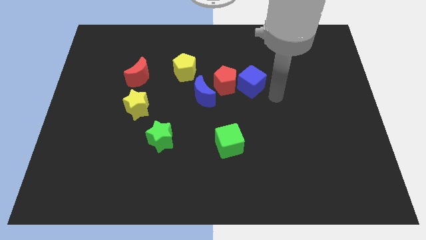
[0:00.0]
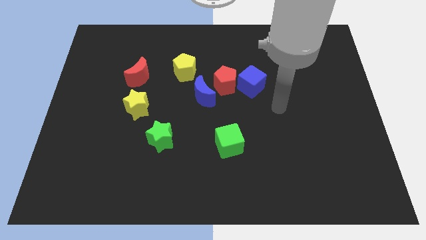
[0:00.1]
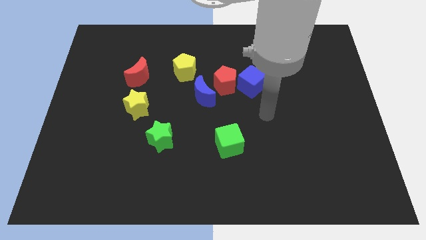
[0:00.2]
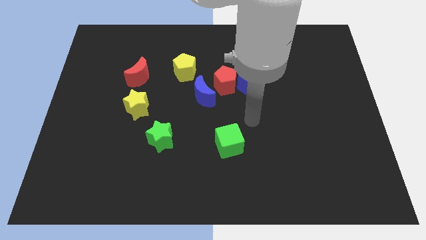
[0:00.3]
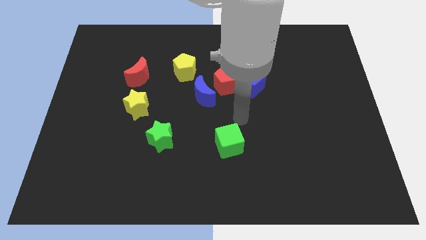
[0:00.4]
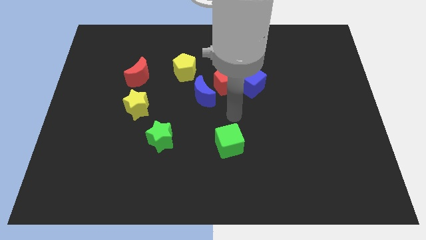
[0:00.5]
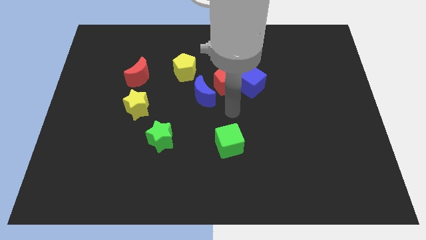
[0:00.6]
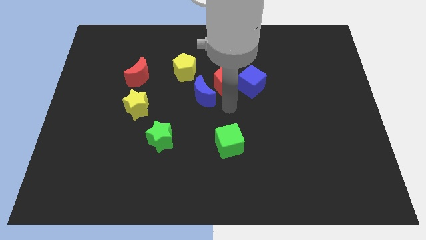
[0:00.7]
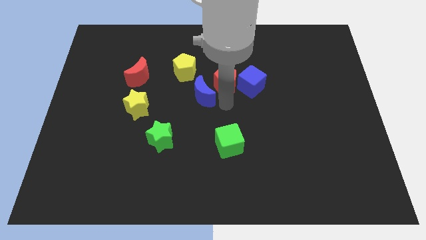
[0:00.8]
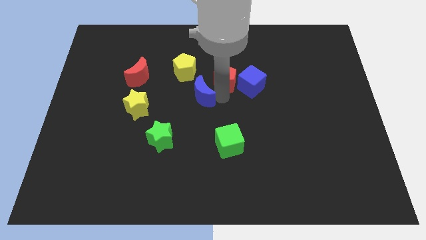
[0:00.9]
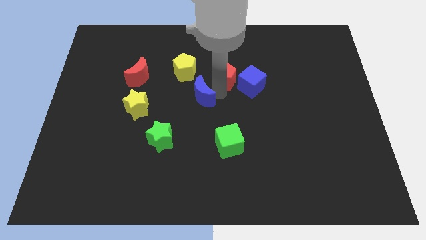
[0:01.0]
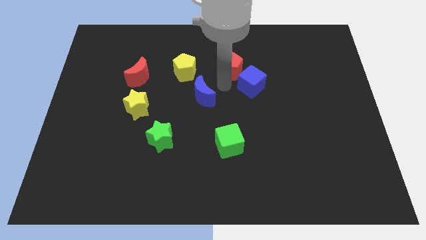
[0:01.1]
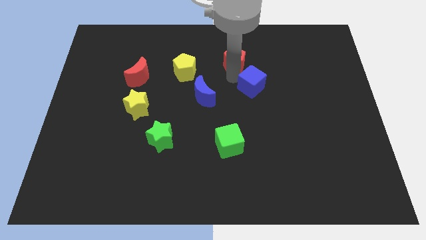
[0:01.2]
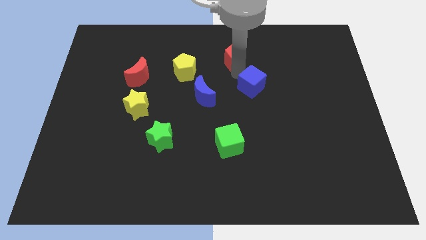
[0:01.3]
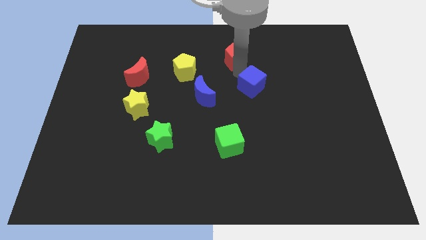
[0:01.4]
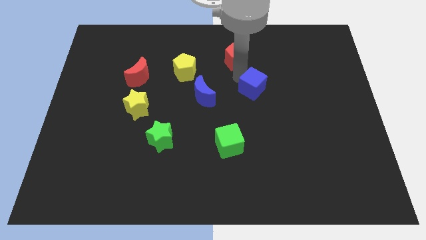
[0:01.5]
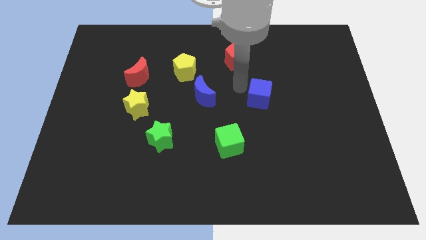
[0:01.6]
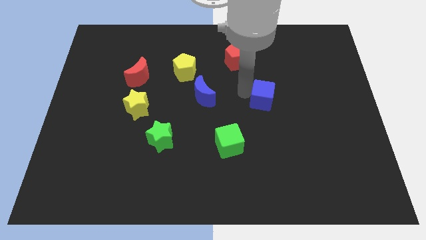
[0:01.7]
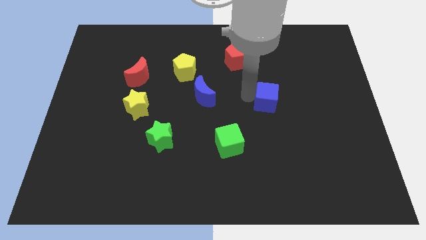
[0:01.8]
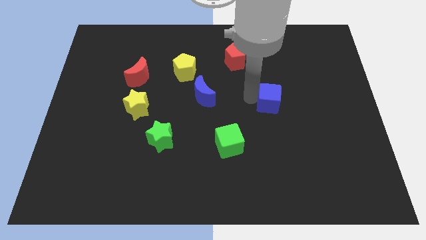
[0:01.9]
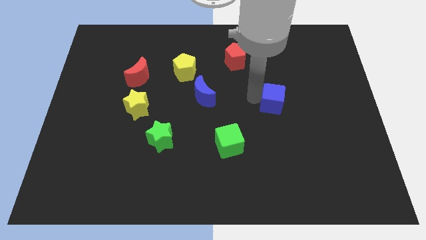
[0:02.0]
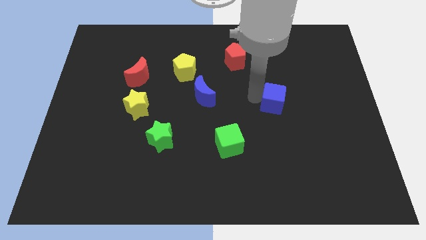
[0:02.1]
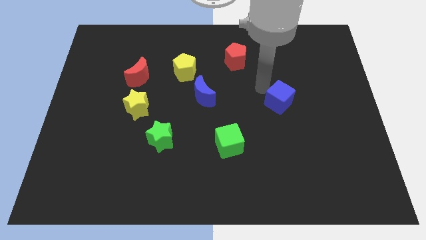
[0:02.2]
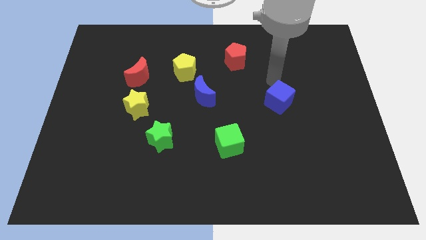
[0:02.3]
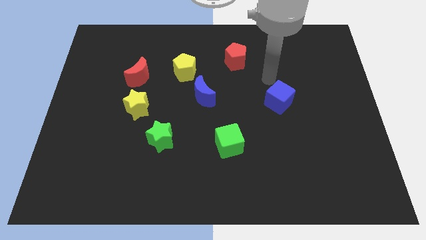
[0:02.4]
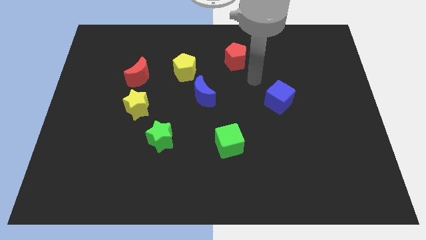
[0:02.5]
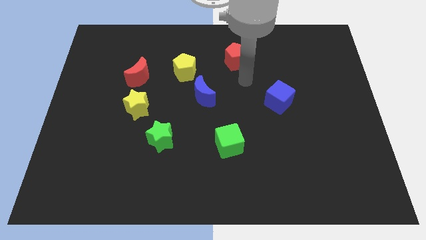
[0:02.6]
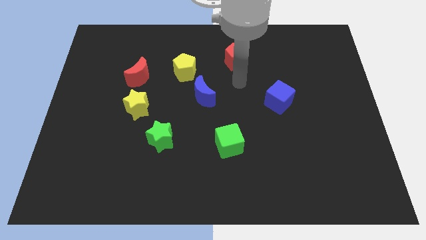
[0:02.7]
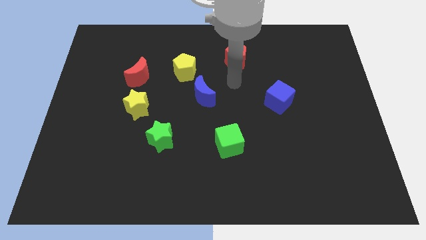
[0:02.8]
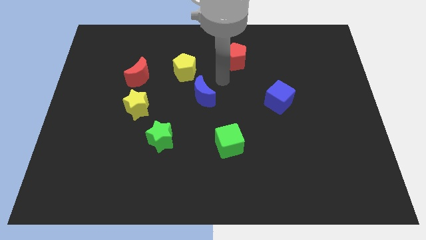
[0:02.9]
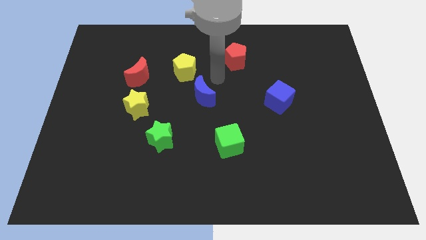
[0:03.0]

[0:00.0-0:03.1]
move the blue cube diagonal to the green cube

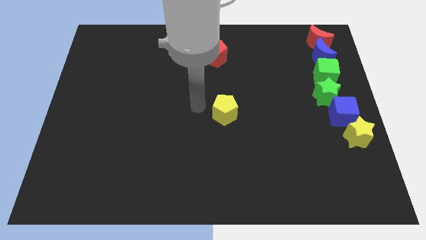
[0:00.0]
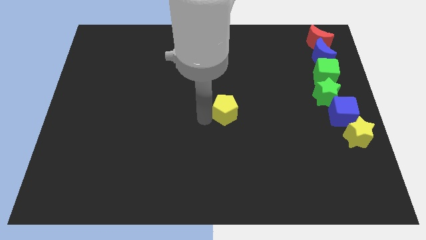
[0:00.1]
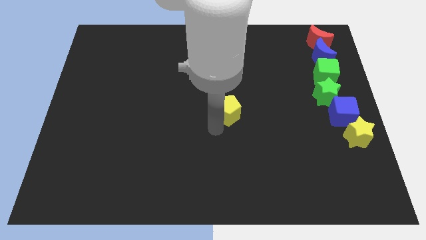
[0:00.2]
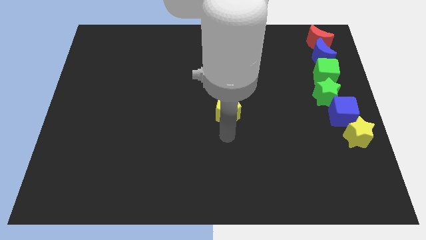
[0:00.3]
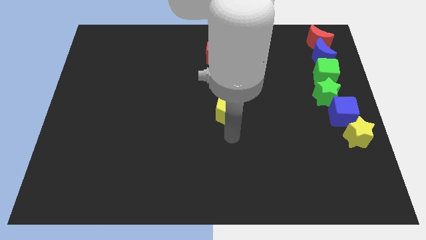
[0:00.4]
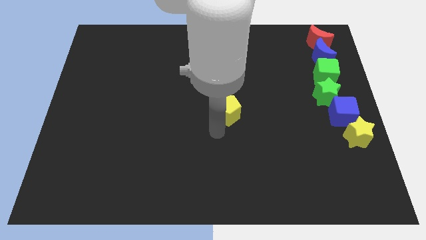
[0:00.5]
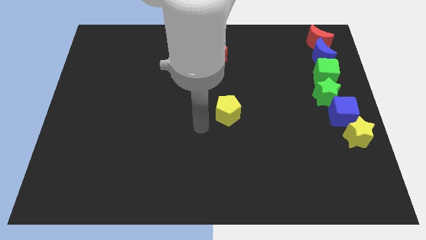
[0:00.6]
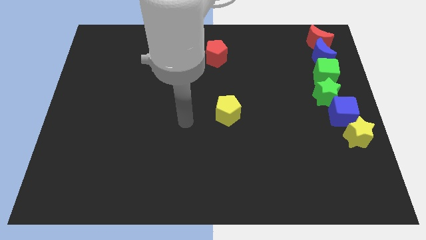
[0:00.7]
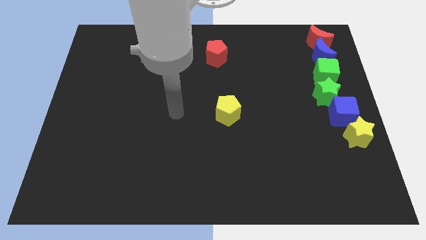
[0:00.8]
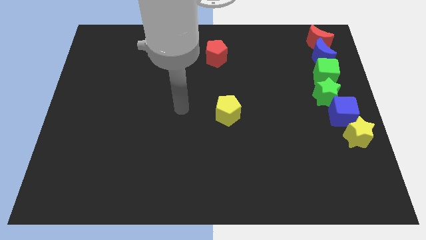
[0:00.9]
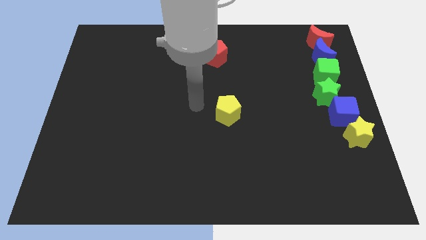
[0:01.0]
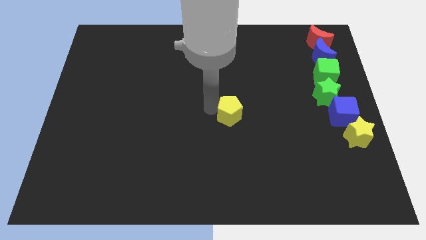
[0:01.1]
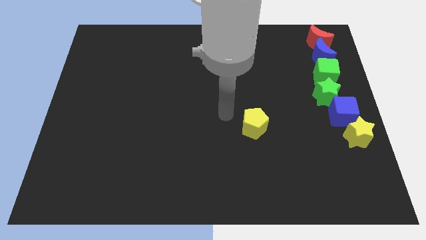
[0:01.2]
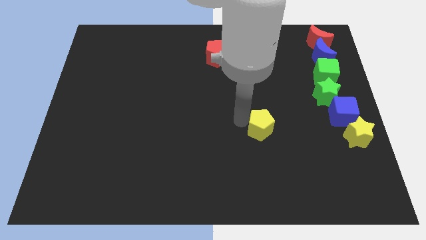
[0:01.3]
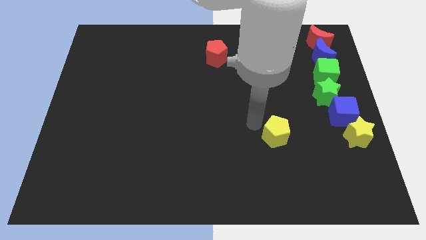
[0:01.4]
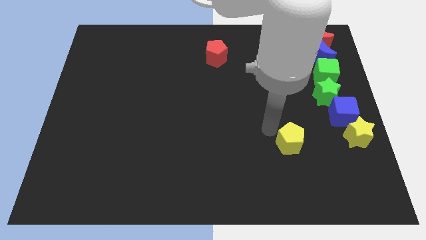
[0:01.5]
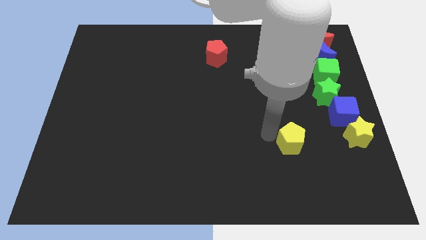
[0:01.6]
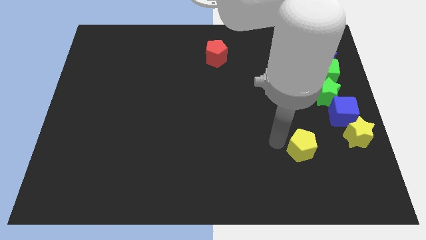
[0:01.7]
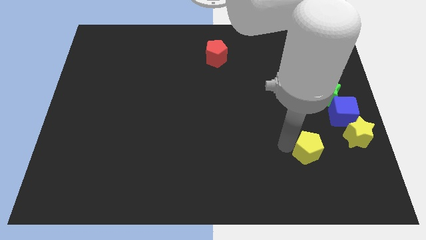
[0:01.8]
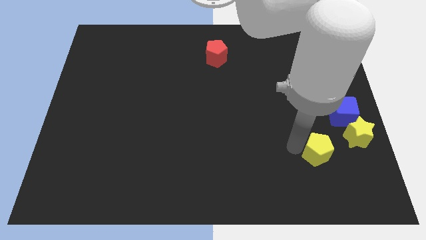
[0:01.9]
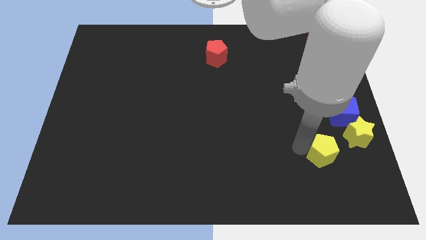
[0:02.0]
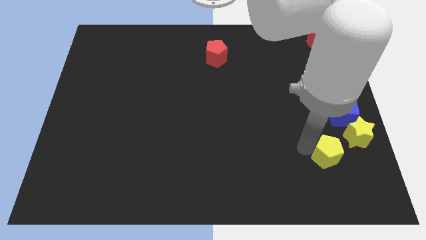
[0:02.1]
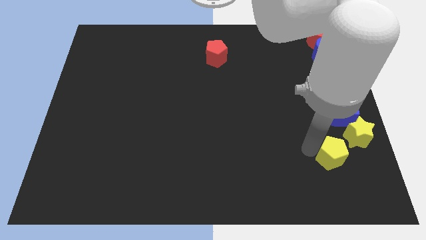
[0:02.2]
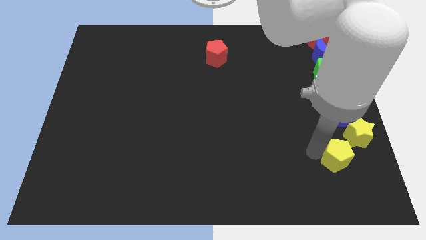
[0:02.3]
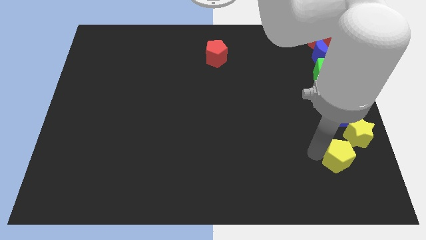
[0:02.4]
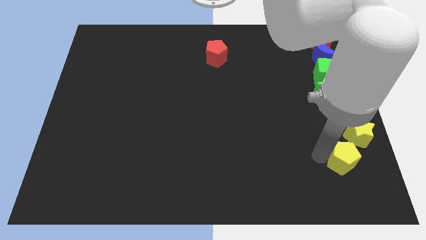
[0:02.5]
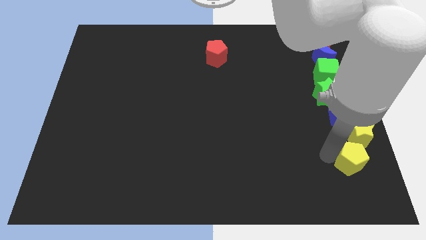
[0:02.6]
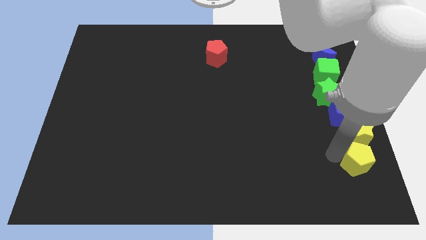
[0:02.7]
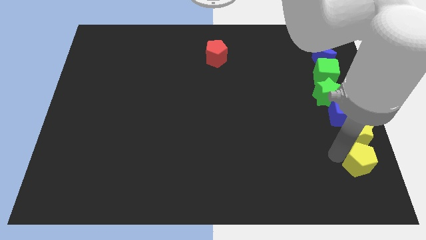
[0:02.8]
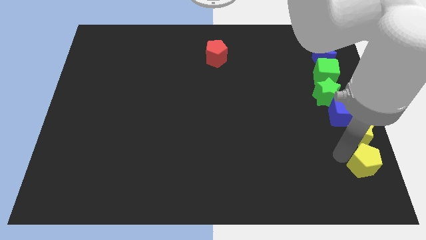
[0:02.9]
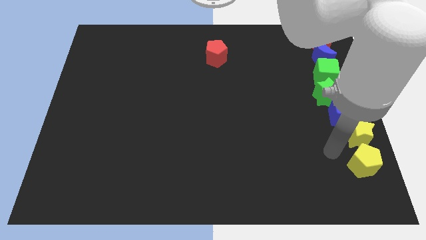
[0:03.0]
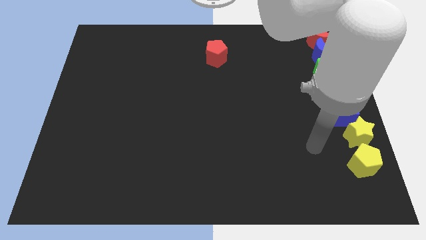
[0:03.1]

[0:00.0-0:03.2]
place yellow pentagon below yellow star

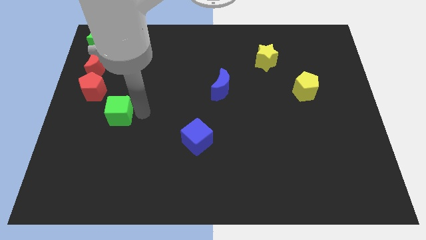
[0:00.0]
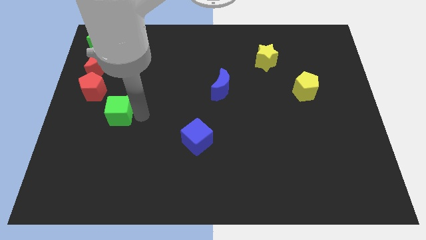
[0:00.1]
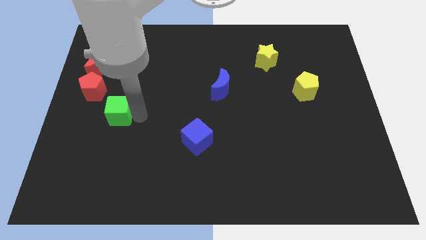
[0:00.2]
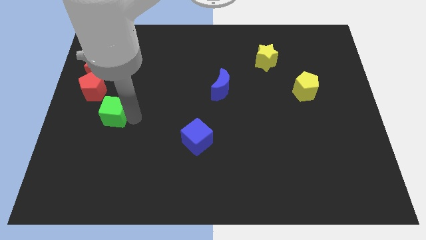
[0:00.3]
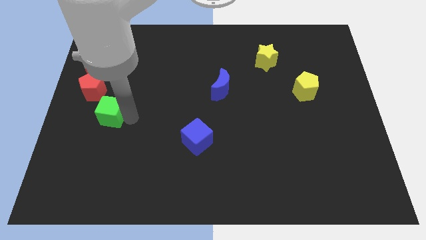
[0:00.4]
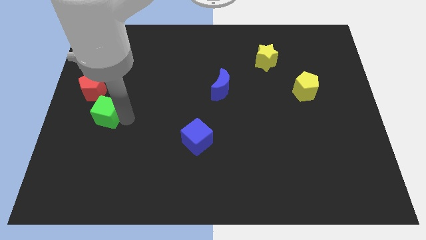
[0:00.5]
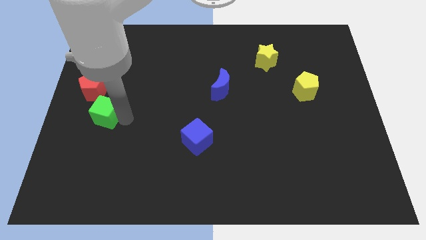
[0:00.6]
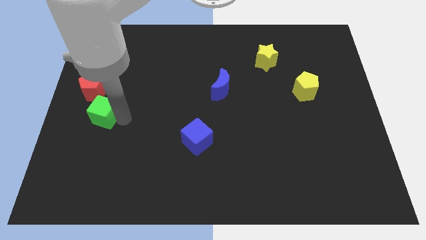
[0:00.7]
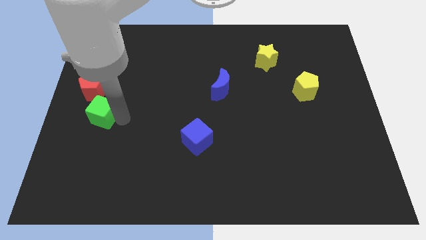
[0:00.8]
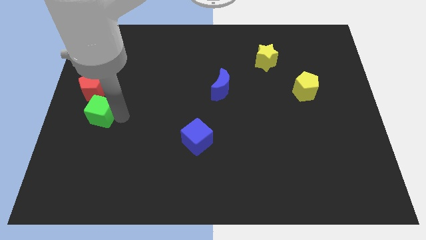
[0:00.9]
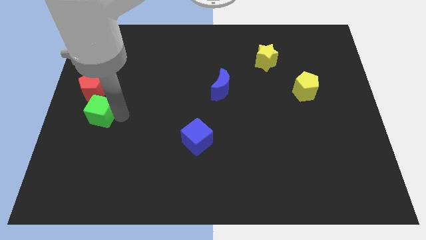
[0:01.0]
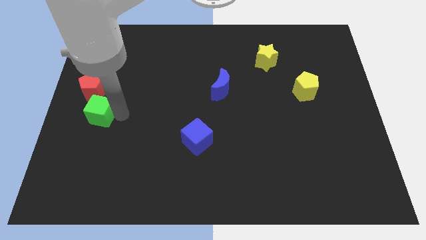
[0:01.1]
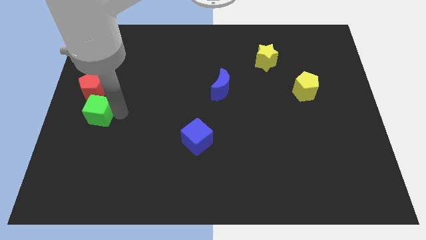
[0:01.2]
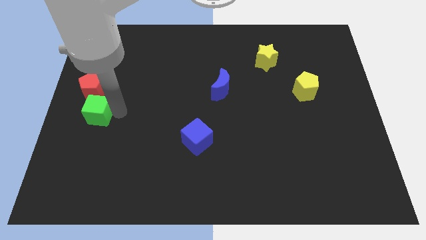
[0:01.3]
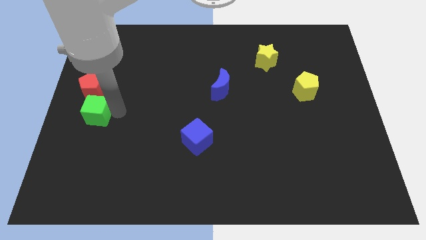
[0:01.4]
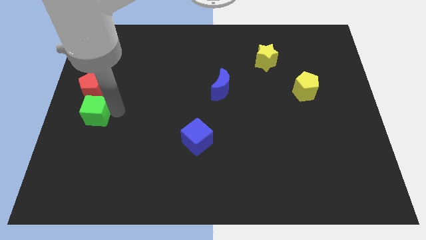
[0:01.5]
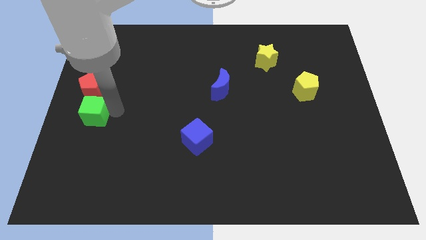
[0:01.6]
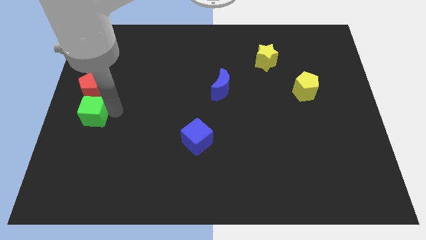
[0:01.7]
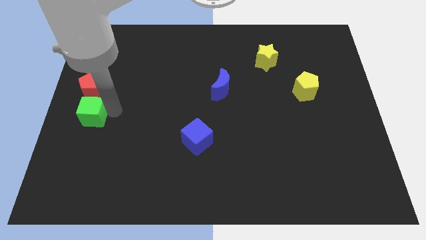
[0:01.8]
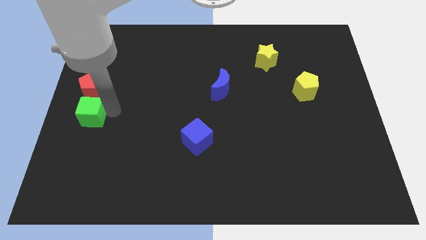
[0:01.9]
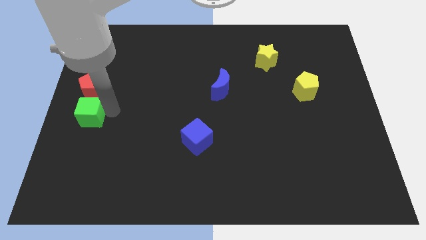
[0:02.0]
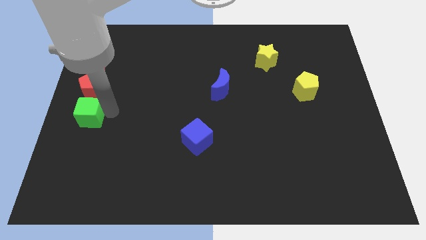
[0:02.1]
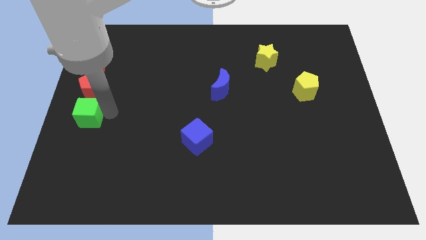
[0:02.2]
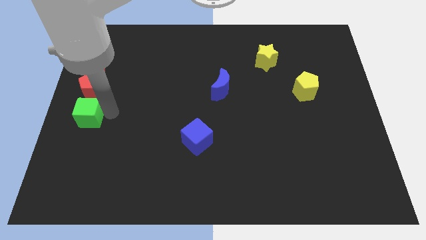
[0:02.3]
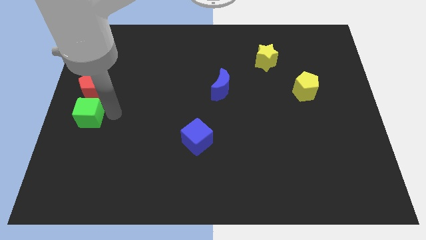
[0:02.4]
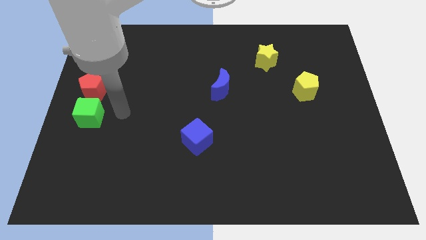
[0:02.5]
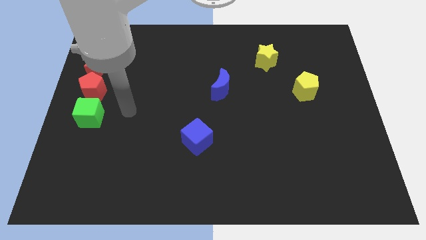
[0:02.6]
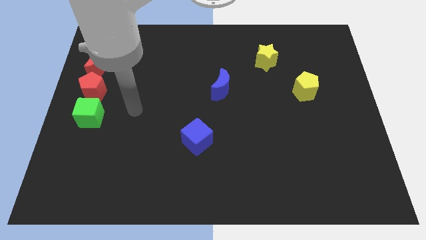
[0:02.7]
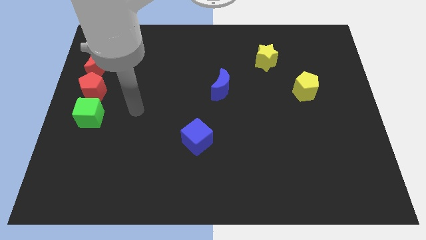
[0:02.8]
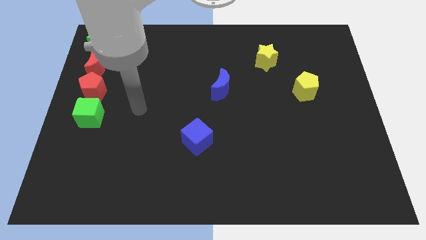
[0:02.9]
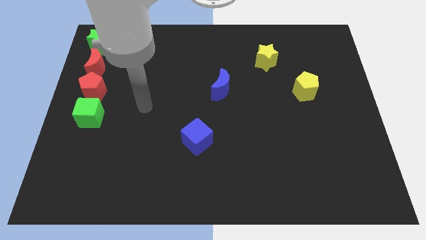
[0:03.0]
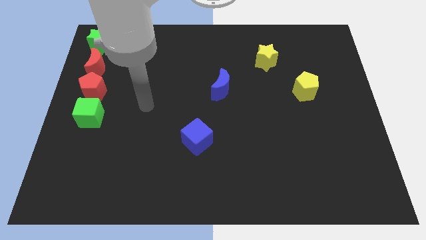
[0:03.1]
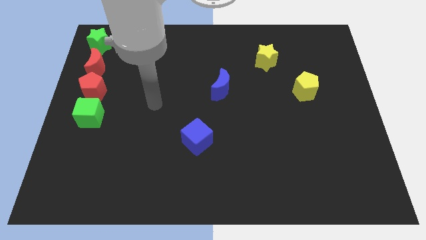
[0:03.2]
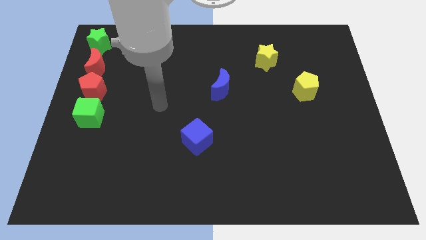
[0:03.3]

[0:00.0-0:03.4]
push green cube below red pentagon
